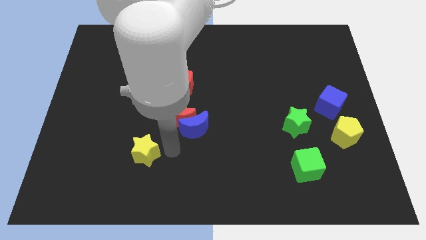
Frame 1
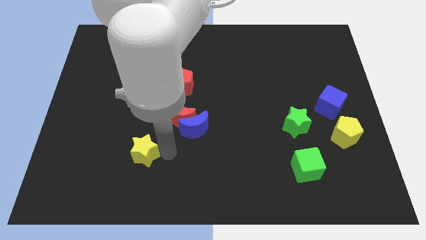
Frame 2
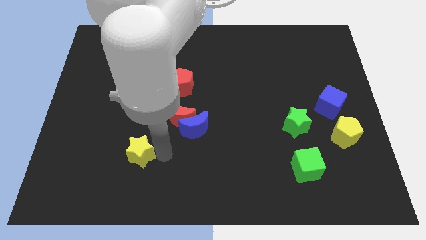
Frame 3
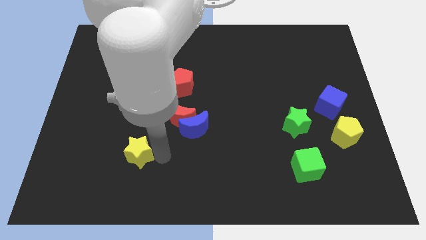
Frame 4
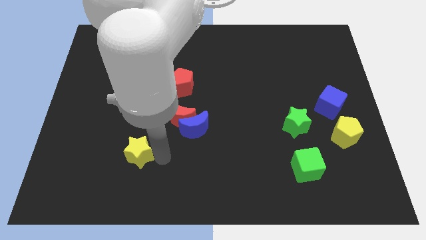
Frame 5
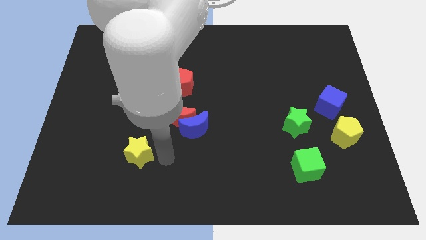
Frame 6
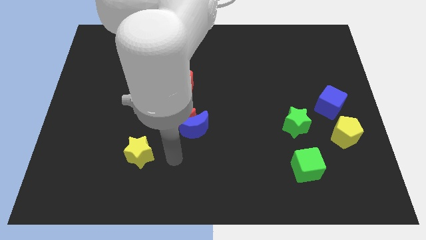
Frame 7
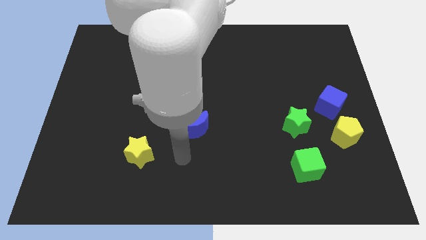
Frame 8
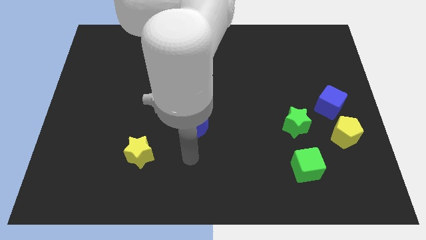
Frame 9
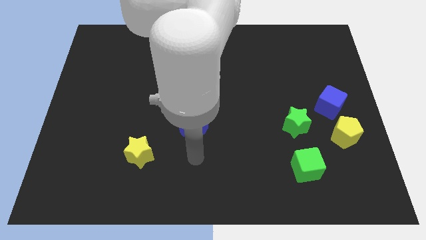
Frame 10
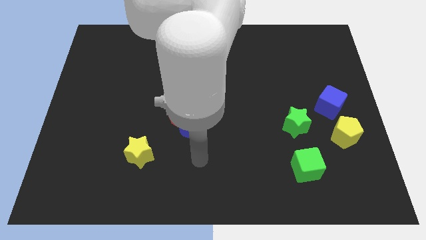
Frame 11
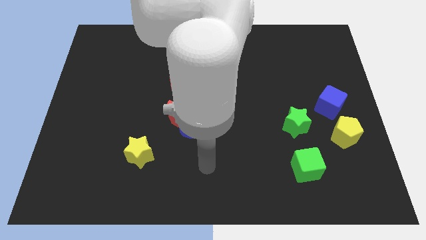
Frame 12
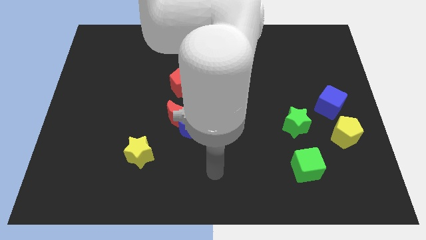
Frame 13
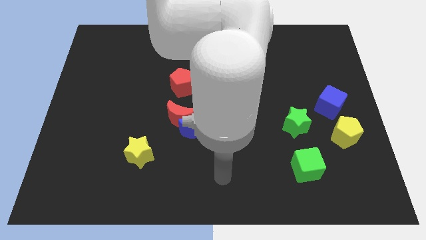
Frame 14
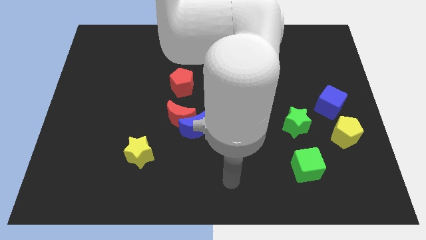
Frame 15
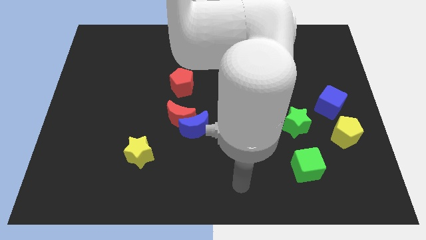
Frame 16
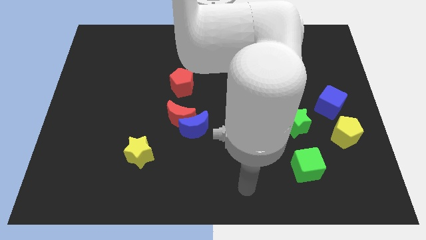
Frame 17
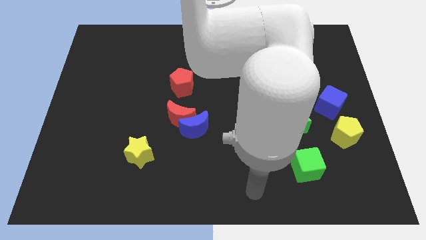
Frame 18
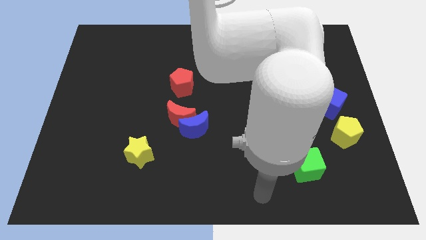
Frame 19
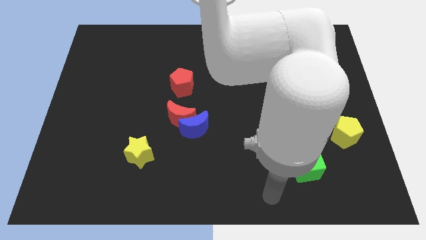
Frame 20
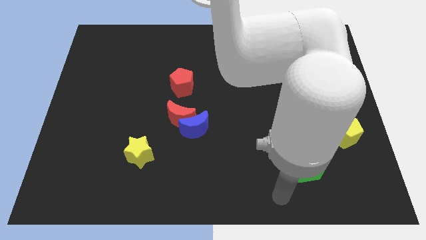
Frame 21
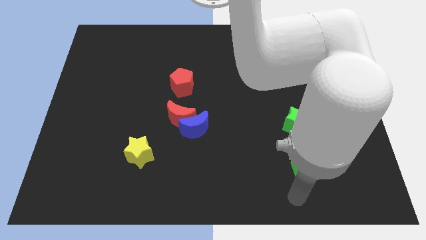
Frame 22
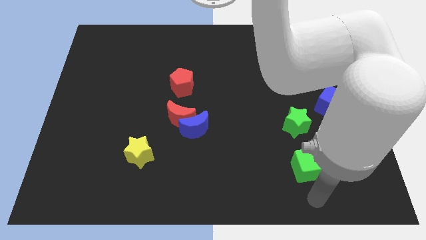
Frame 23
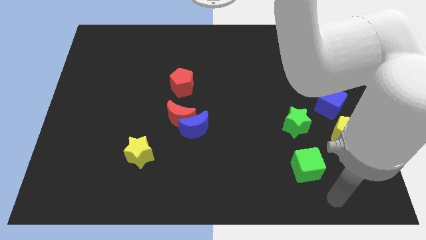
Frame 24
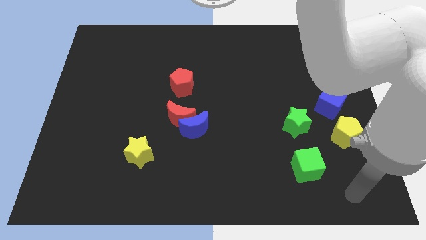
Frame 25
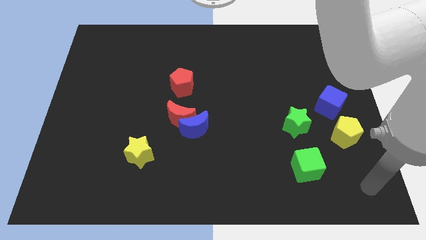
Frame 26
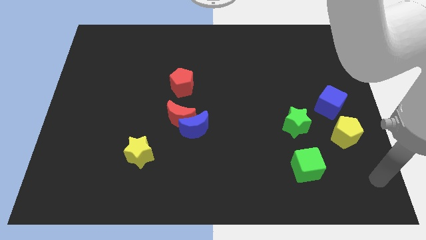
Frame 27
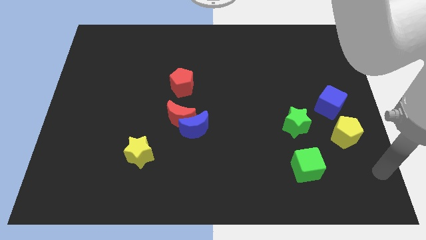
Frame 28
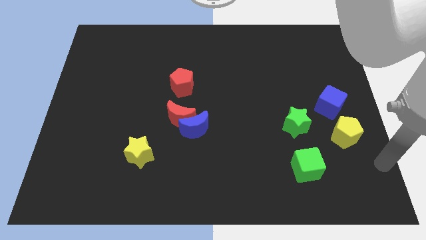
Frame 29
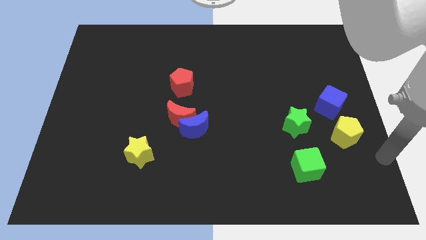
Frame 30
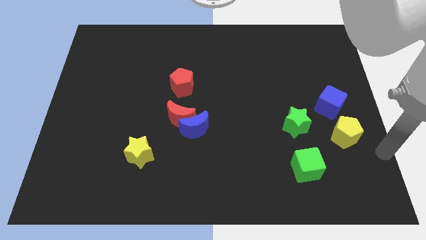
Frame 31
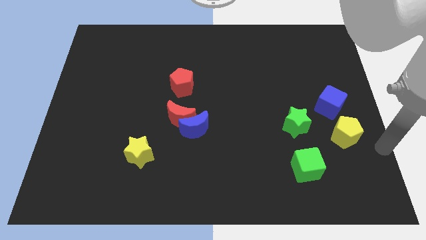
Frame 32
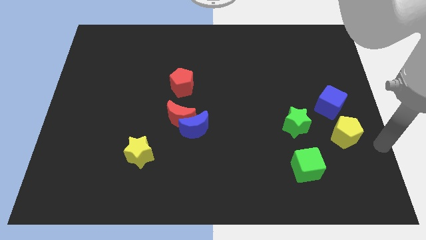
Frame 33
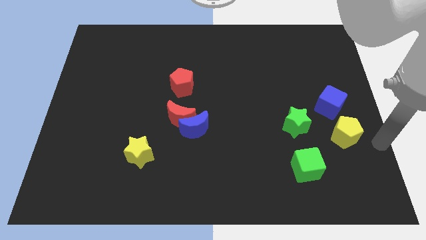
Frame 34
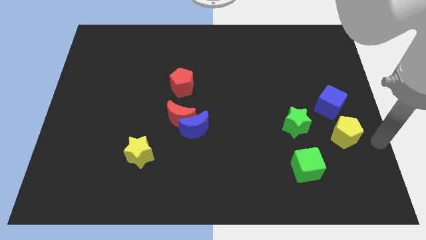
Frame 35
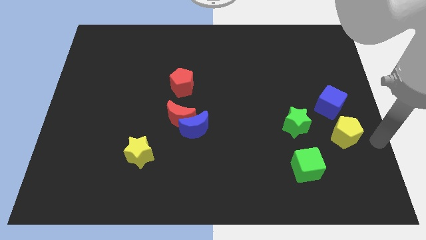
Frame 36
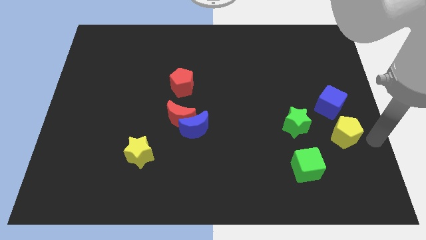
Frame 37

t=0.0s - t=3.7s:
move the arm right to the yellow pentagon

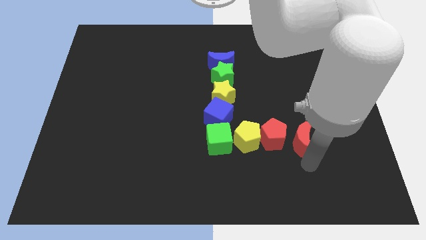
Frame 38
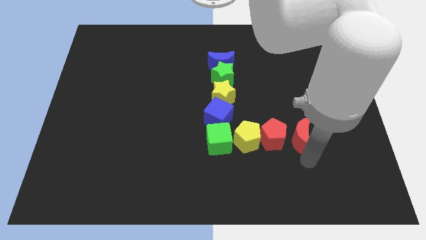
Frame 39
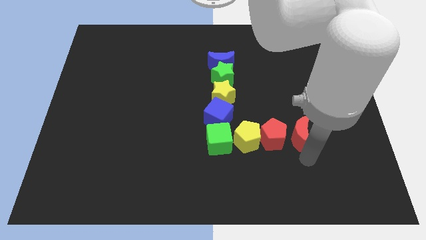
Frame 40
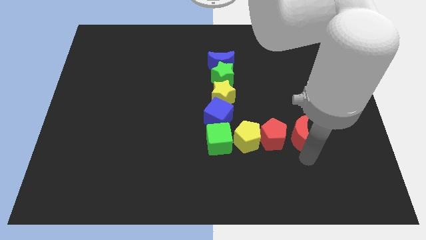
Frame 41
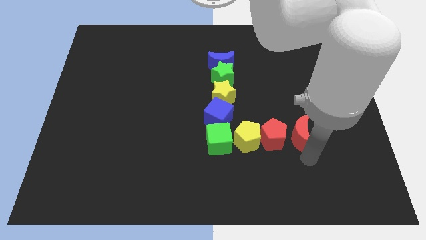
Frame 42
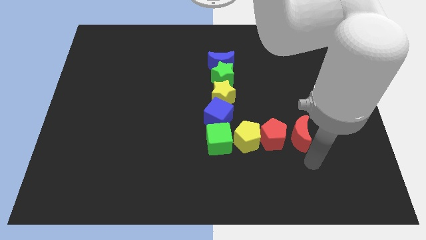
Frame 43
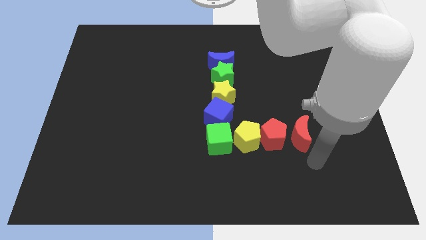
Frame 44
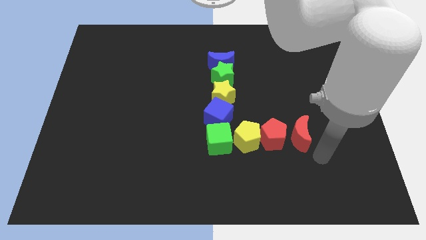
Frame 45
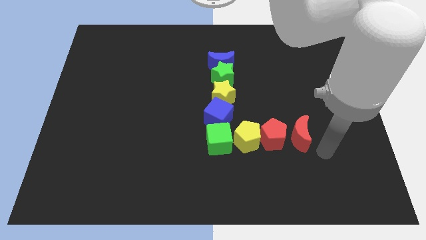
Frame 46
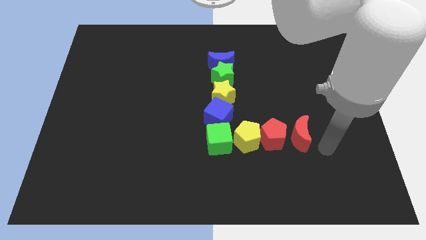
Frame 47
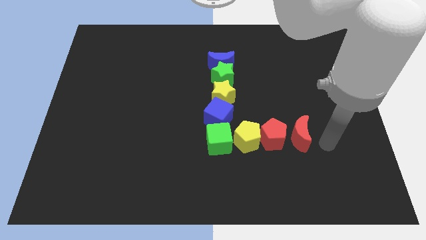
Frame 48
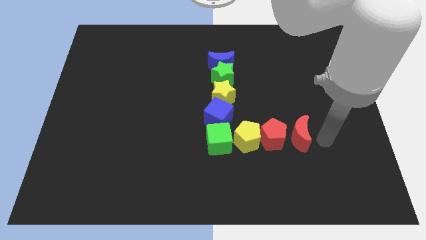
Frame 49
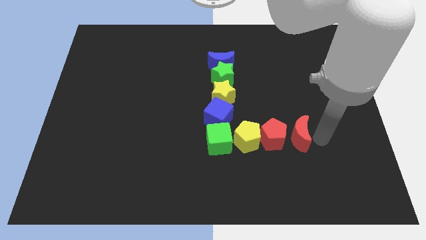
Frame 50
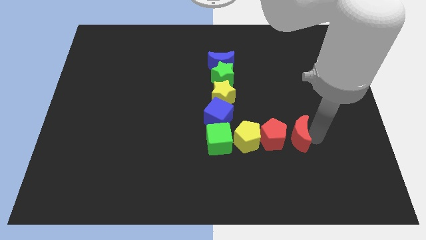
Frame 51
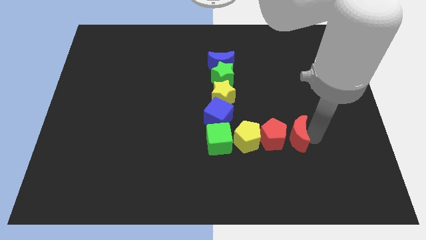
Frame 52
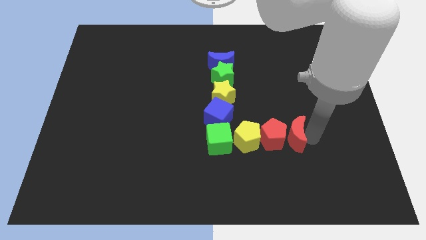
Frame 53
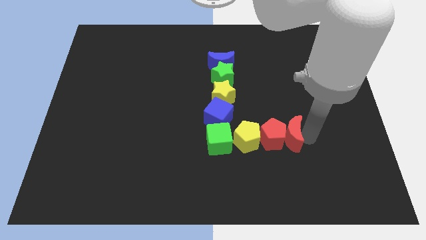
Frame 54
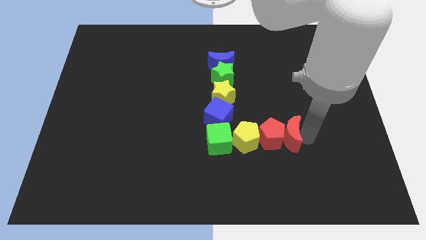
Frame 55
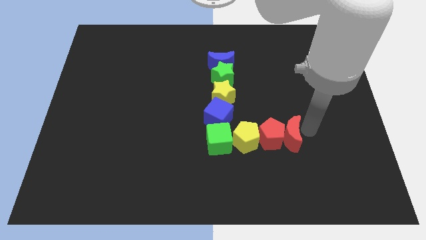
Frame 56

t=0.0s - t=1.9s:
push the red crescent to the right side of the red pentagon

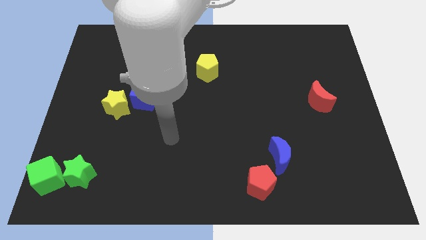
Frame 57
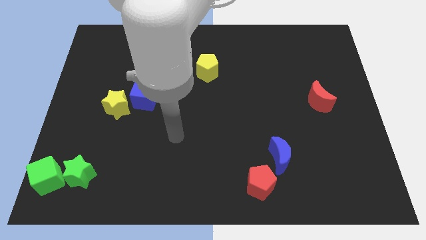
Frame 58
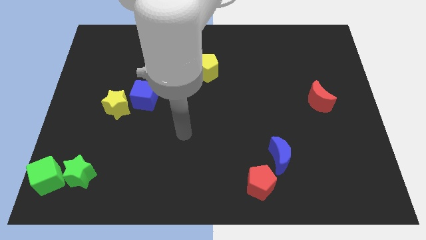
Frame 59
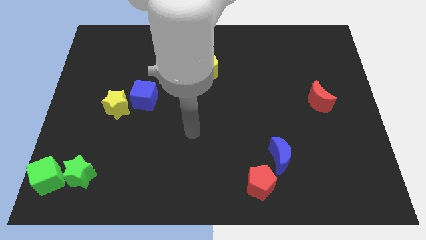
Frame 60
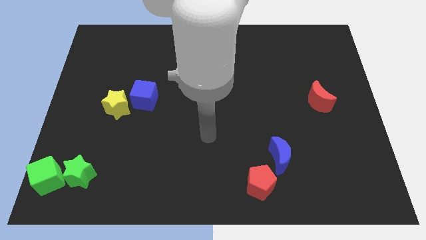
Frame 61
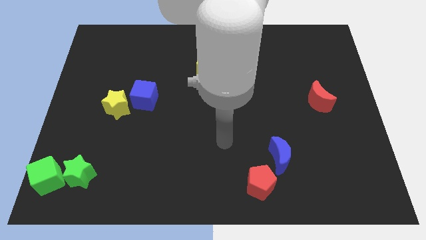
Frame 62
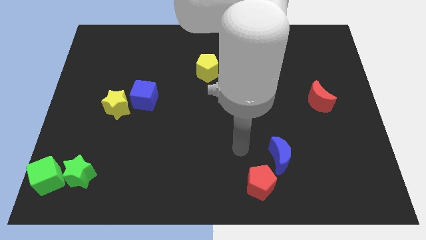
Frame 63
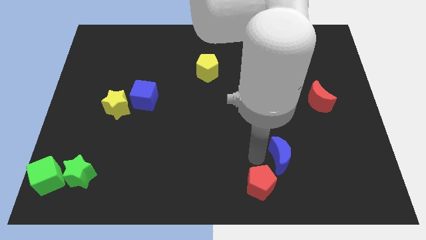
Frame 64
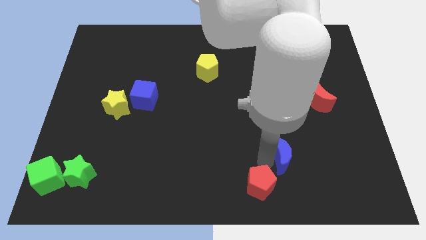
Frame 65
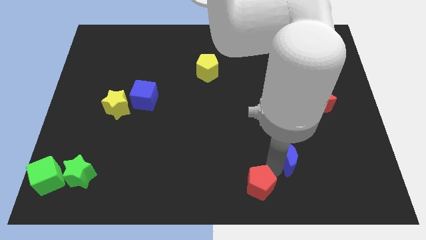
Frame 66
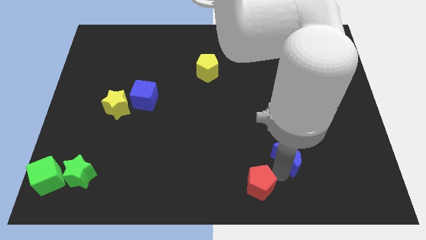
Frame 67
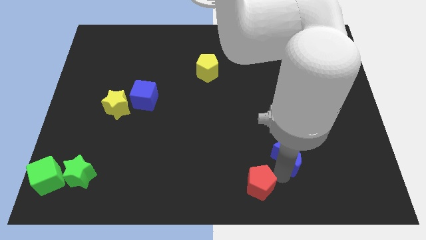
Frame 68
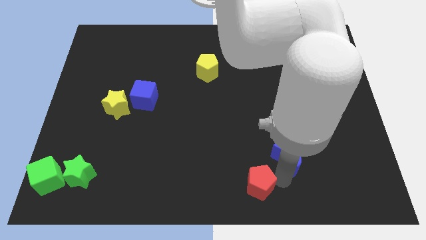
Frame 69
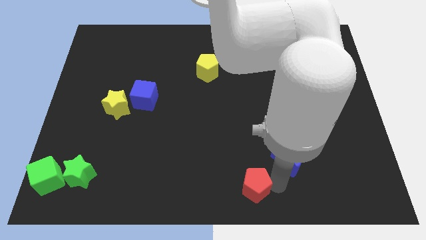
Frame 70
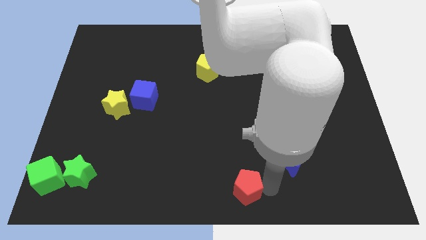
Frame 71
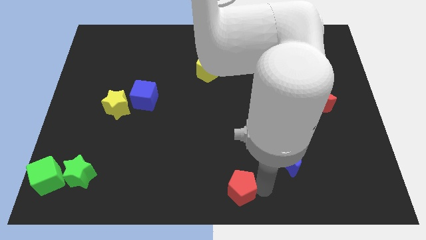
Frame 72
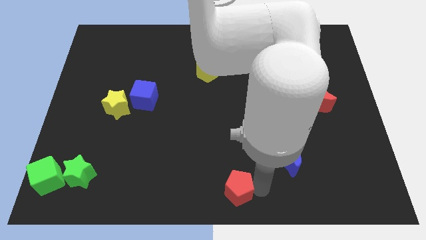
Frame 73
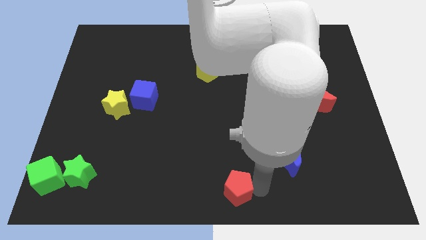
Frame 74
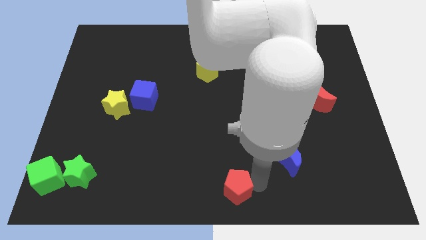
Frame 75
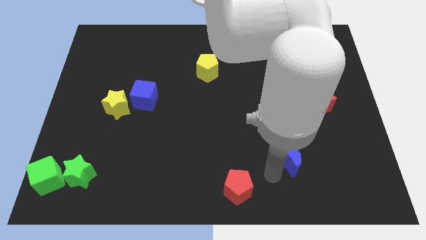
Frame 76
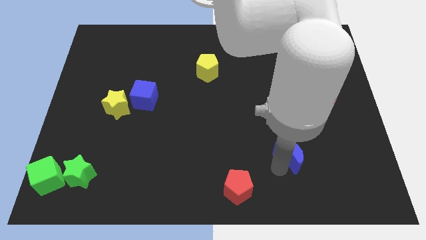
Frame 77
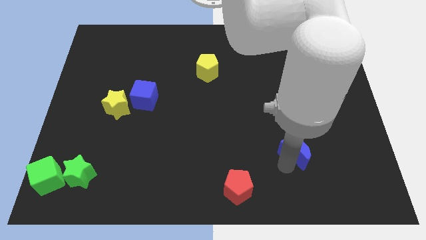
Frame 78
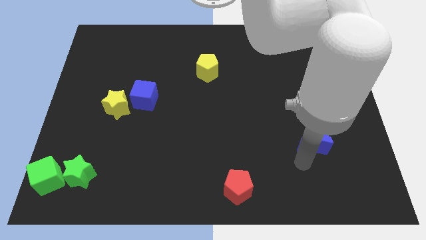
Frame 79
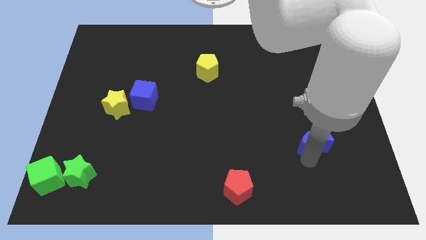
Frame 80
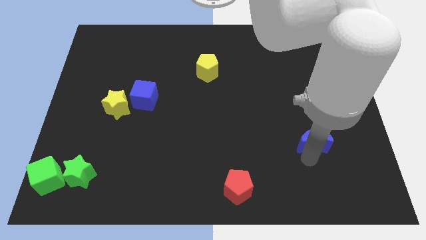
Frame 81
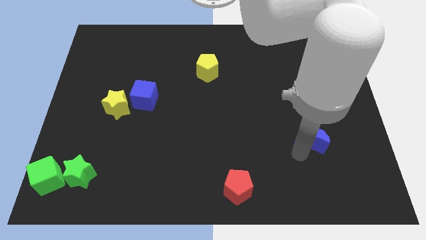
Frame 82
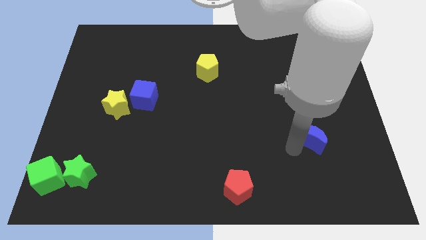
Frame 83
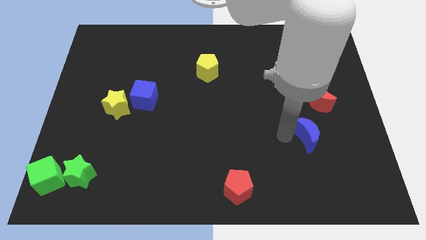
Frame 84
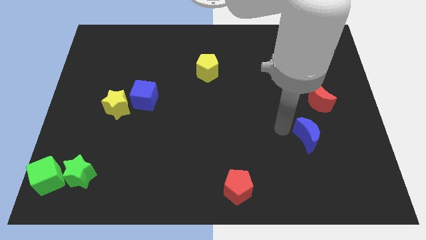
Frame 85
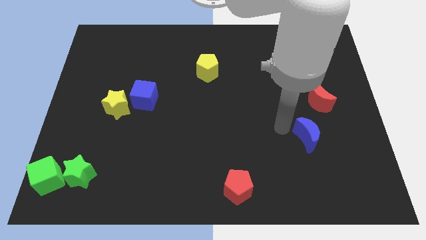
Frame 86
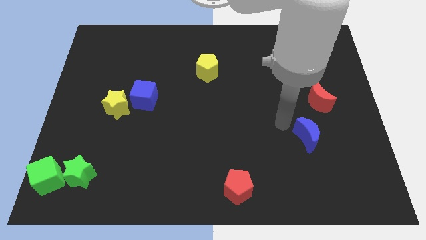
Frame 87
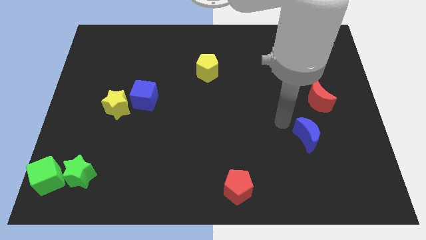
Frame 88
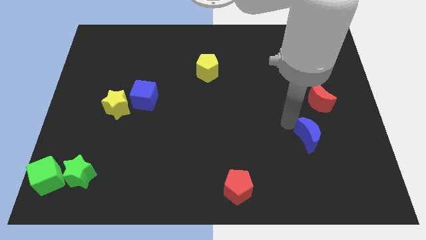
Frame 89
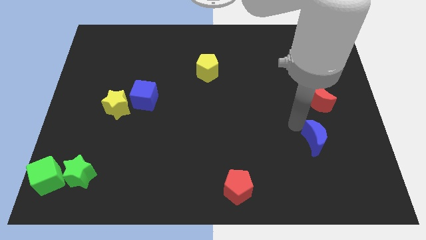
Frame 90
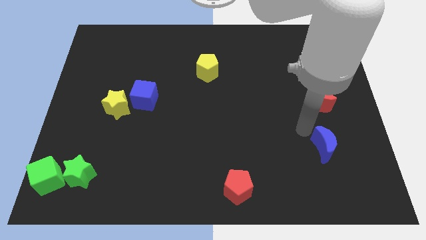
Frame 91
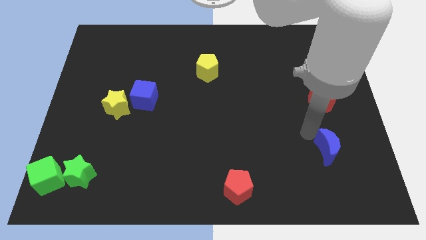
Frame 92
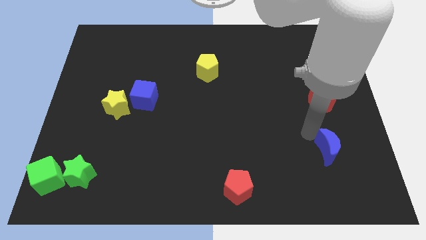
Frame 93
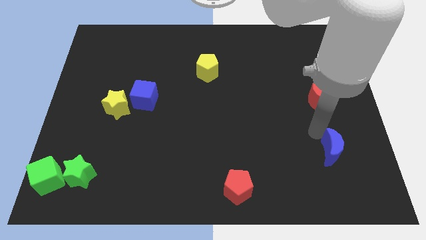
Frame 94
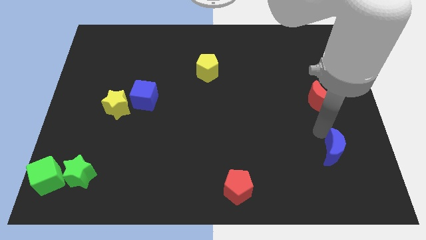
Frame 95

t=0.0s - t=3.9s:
separate the red pentagon and blue crescent
